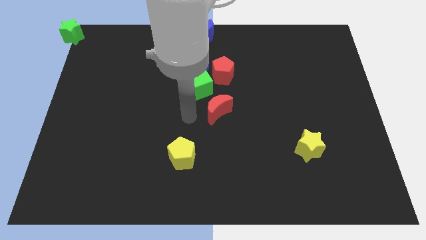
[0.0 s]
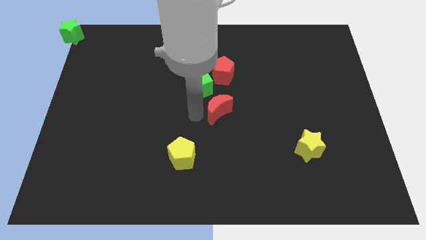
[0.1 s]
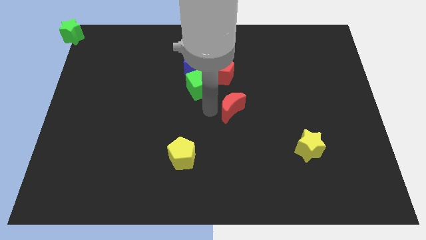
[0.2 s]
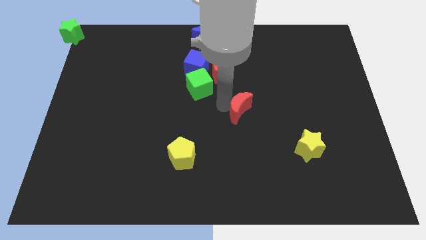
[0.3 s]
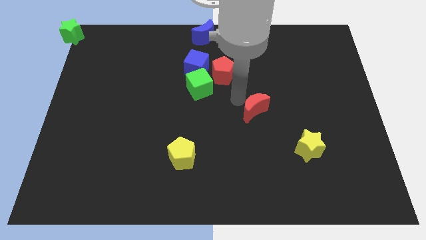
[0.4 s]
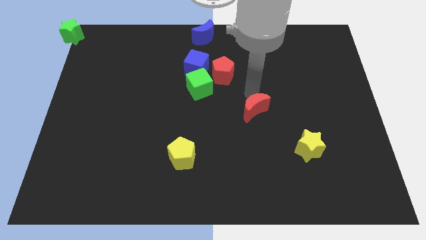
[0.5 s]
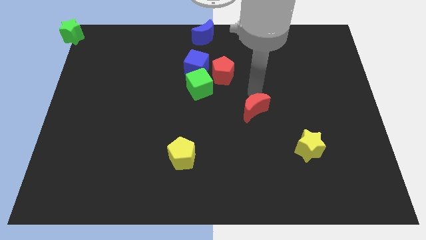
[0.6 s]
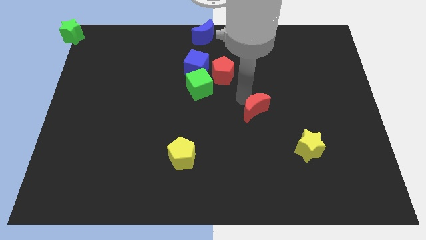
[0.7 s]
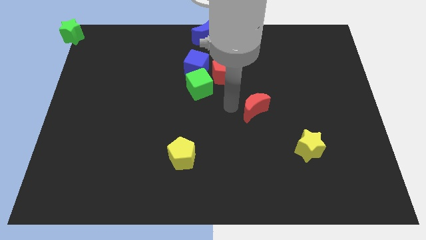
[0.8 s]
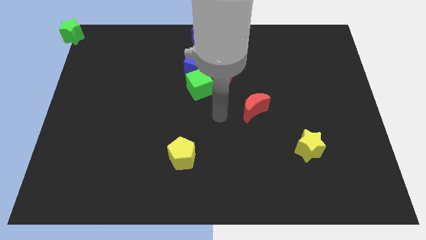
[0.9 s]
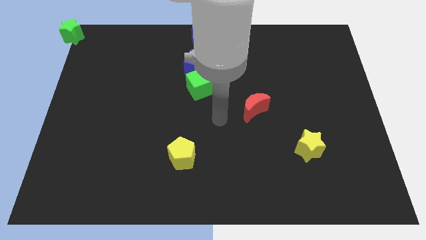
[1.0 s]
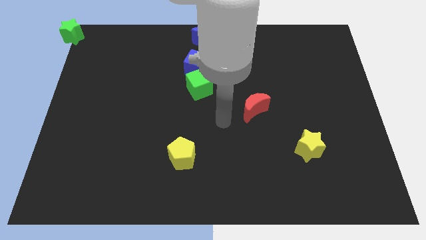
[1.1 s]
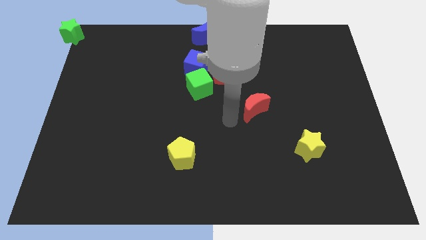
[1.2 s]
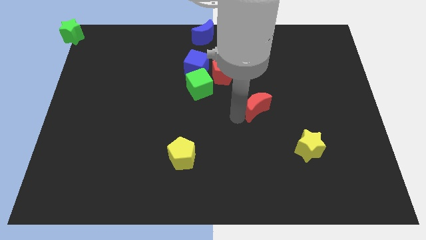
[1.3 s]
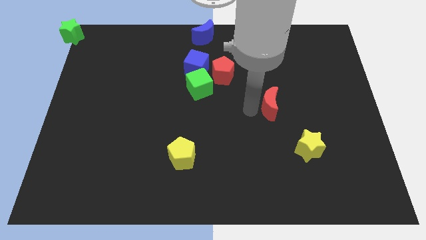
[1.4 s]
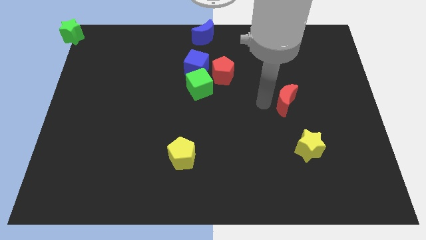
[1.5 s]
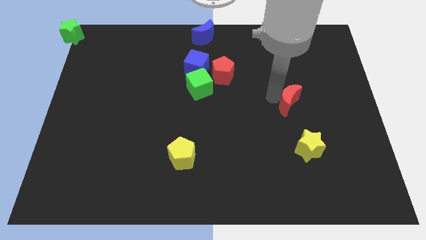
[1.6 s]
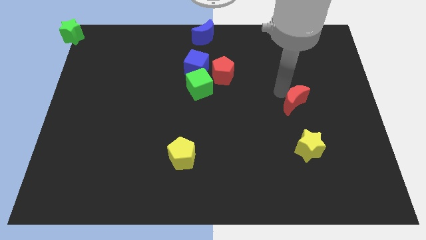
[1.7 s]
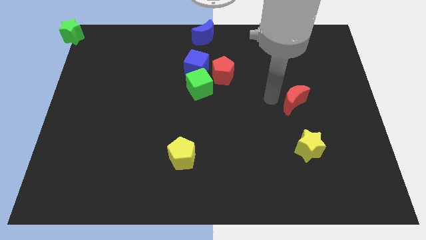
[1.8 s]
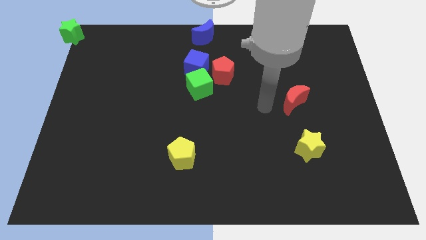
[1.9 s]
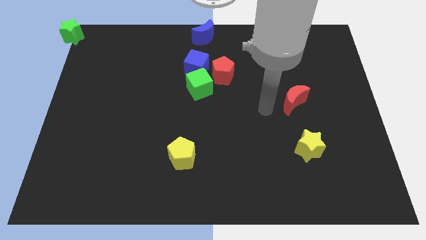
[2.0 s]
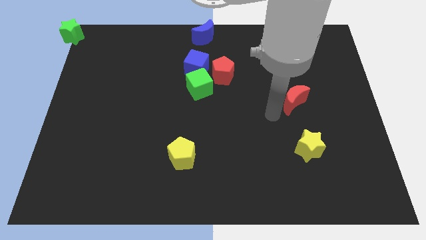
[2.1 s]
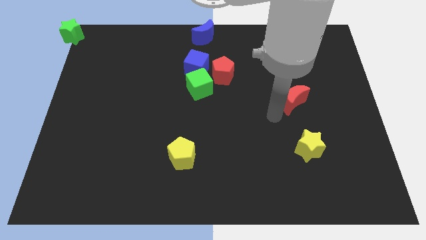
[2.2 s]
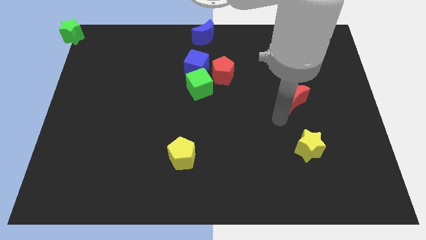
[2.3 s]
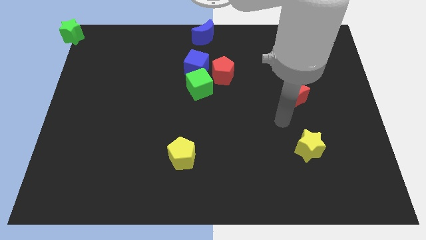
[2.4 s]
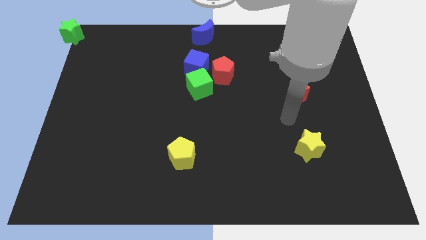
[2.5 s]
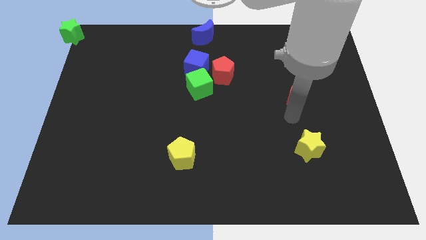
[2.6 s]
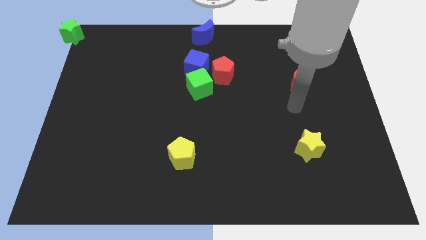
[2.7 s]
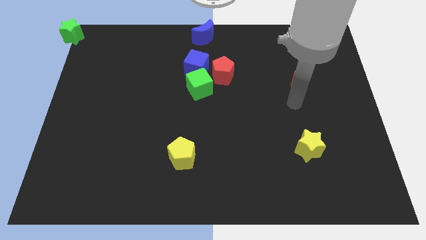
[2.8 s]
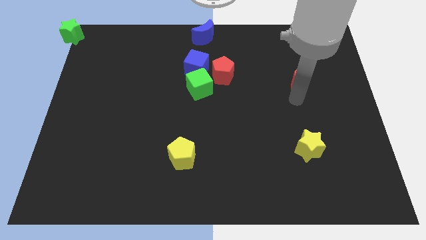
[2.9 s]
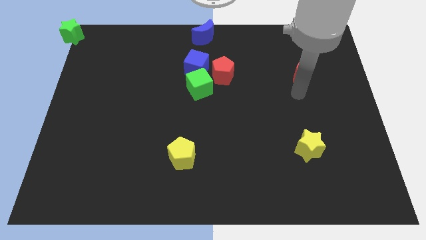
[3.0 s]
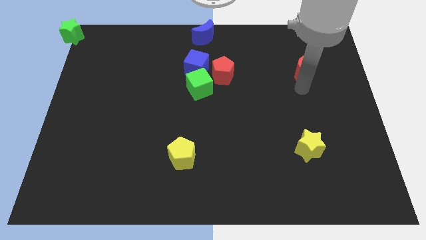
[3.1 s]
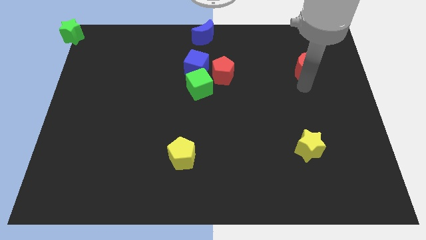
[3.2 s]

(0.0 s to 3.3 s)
push the red moon parallel to the red pentagon

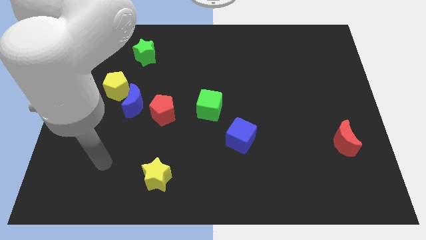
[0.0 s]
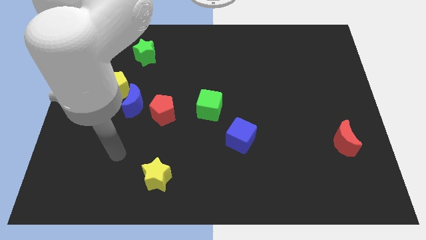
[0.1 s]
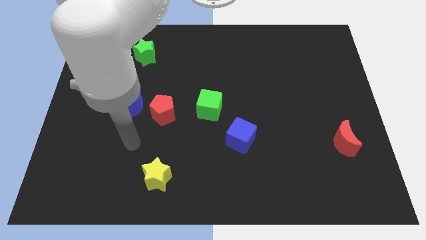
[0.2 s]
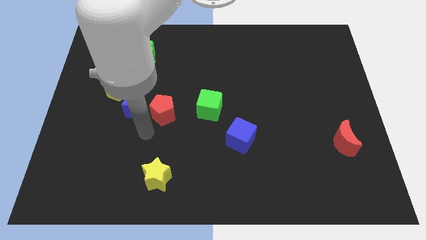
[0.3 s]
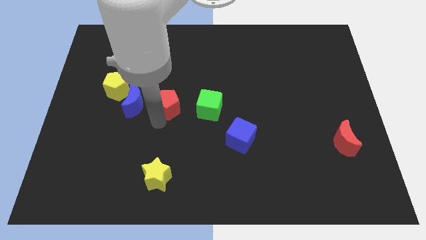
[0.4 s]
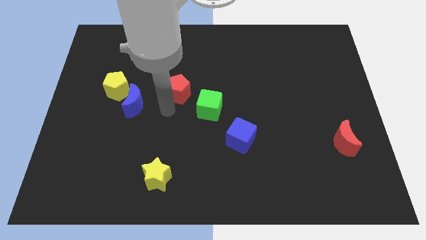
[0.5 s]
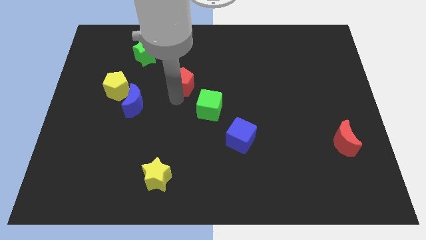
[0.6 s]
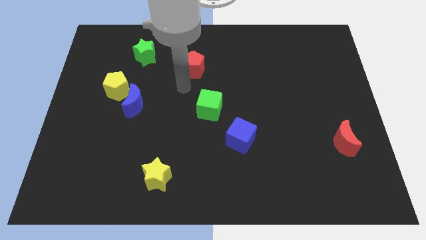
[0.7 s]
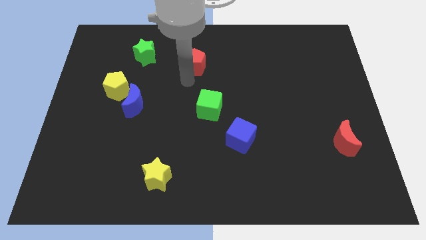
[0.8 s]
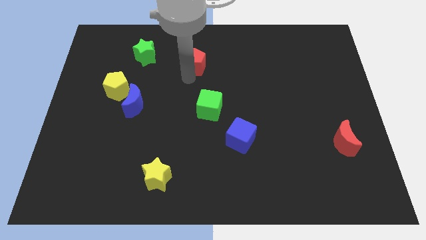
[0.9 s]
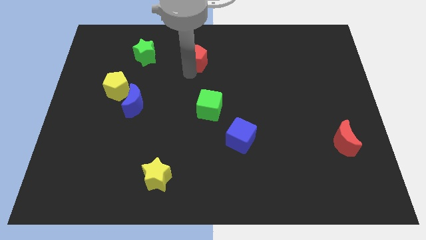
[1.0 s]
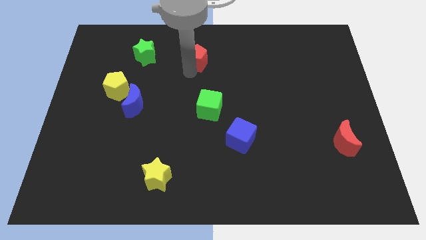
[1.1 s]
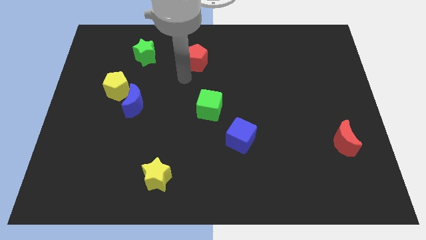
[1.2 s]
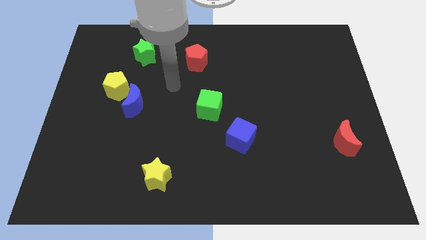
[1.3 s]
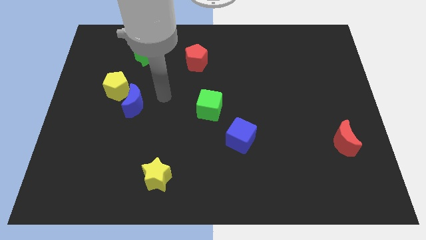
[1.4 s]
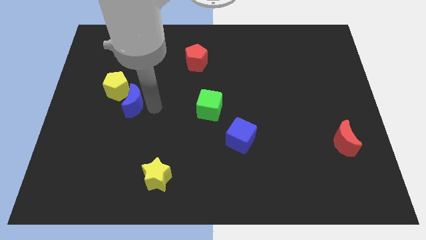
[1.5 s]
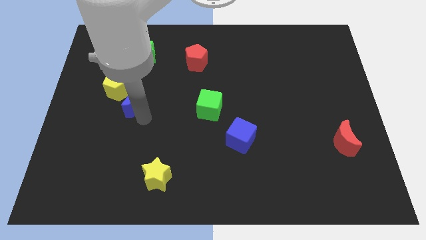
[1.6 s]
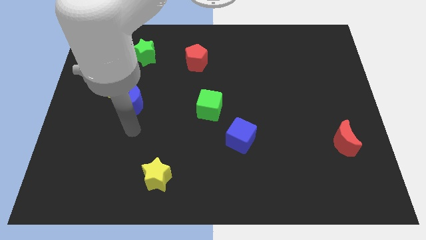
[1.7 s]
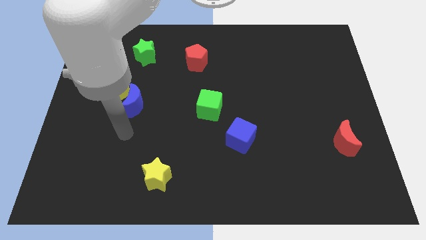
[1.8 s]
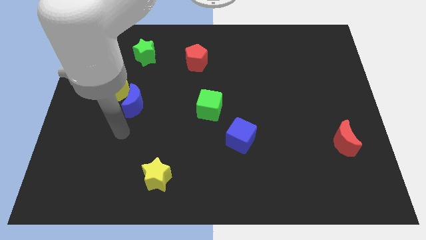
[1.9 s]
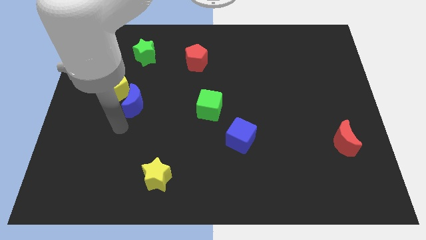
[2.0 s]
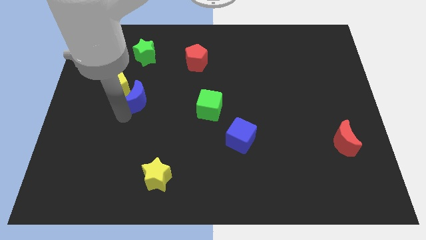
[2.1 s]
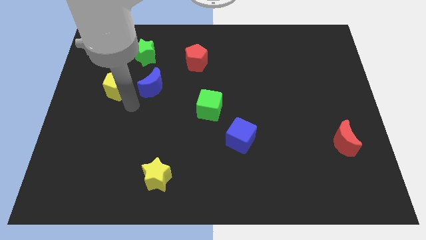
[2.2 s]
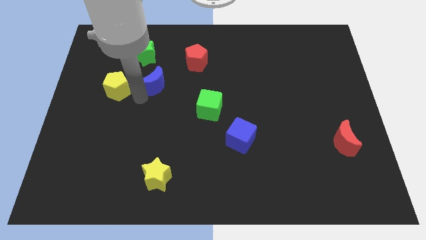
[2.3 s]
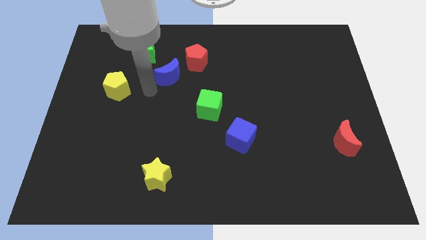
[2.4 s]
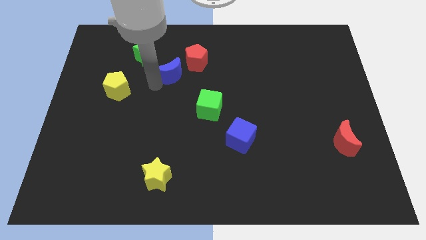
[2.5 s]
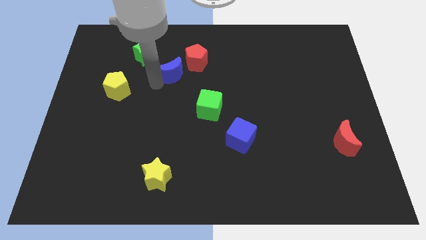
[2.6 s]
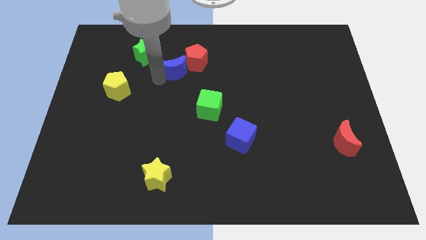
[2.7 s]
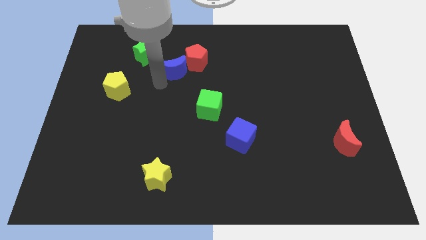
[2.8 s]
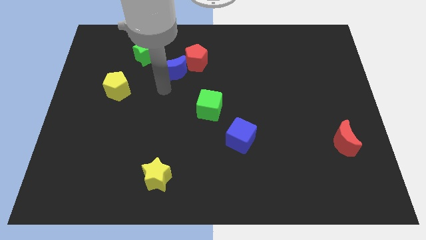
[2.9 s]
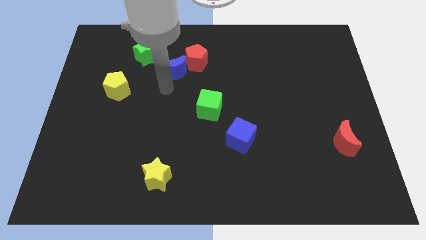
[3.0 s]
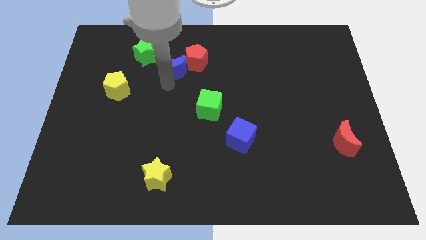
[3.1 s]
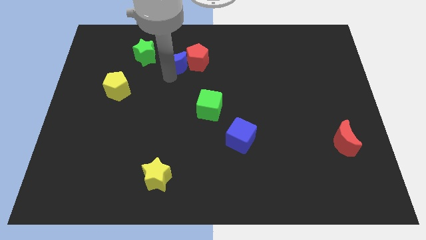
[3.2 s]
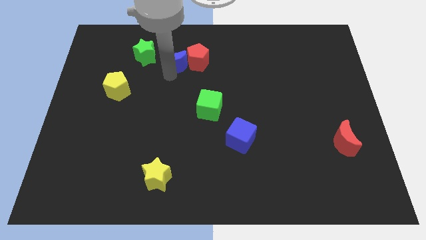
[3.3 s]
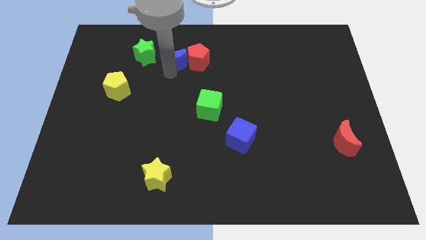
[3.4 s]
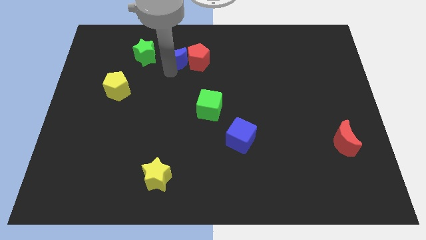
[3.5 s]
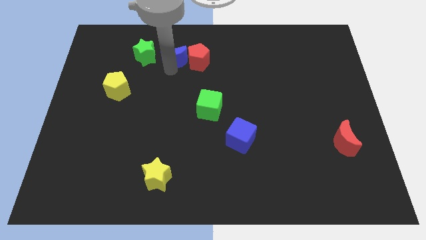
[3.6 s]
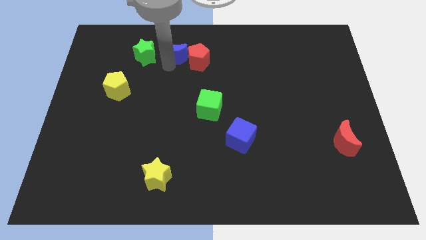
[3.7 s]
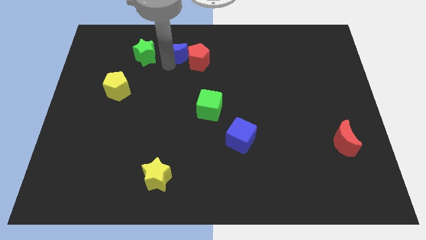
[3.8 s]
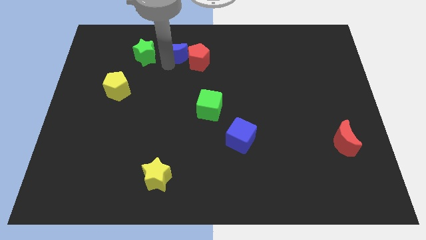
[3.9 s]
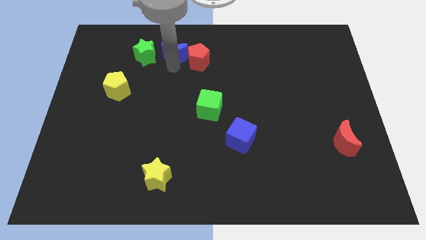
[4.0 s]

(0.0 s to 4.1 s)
place red pentagon and the blue crescent in the top center of the board

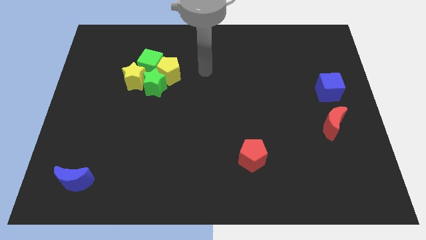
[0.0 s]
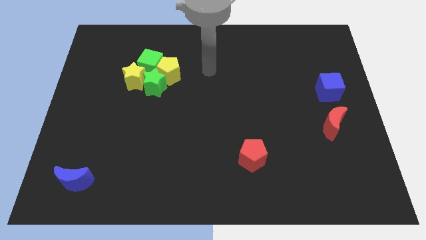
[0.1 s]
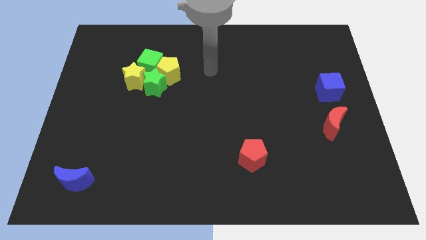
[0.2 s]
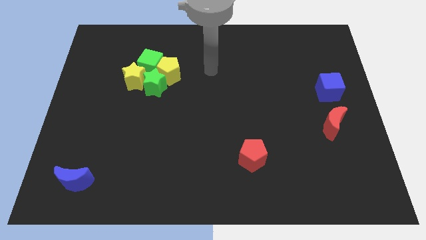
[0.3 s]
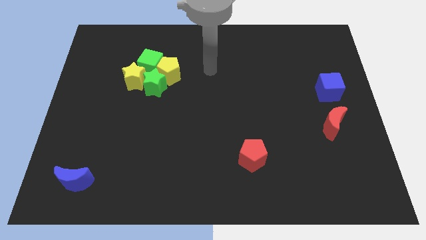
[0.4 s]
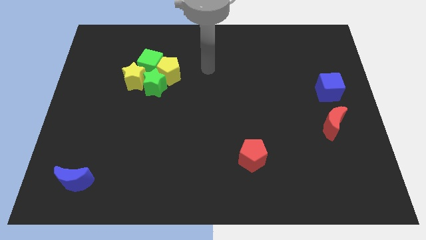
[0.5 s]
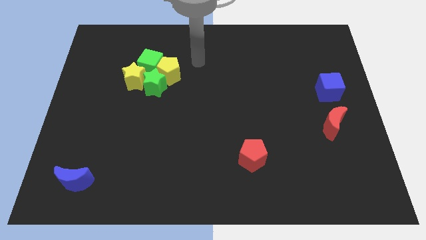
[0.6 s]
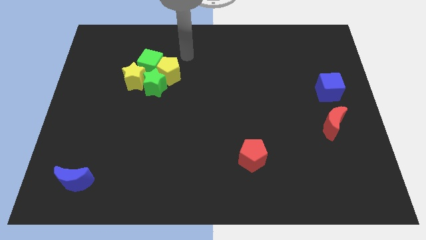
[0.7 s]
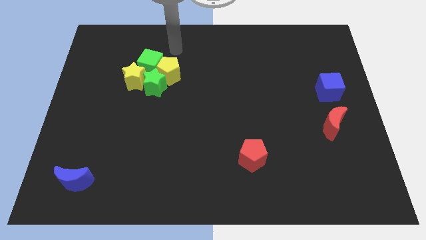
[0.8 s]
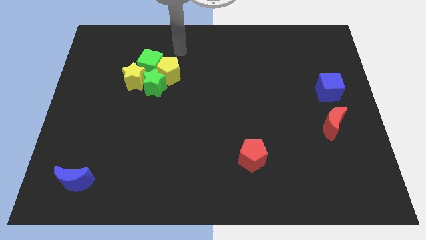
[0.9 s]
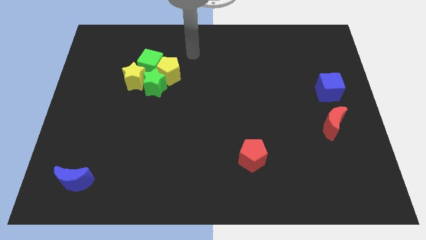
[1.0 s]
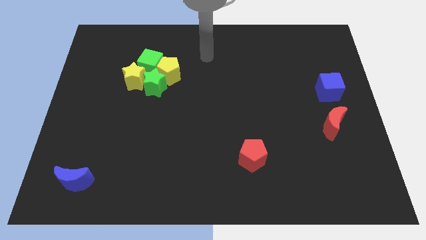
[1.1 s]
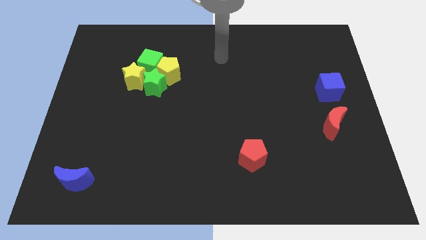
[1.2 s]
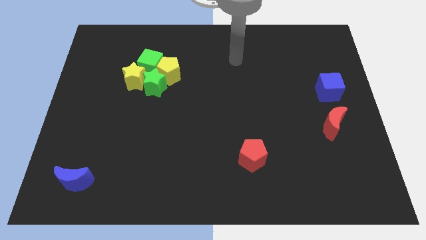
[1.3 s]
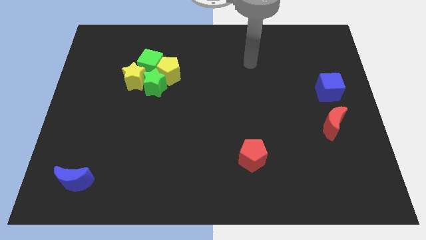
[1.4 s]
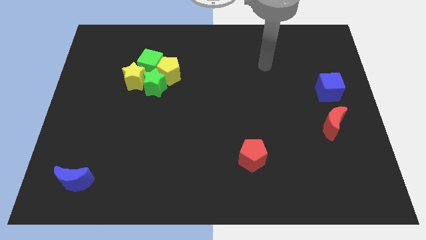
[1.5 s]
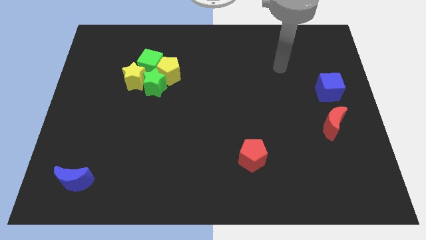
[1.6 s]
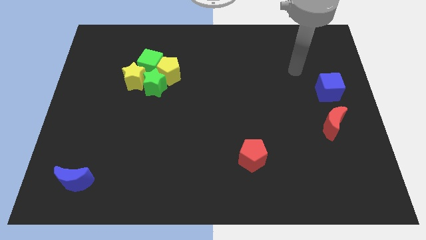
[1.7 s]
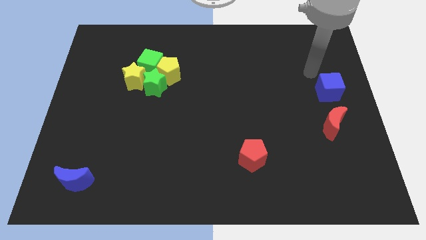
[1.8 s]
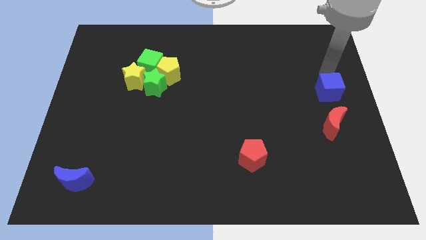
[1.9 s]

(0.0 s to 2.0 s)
drag the pointer to the top of the blue cube
